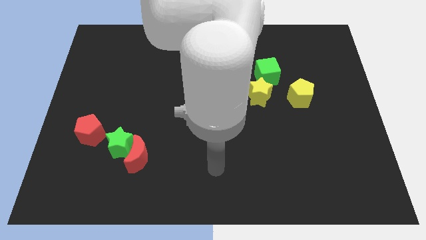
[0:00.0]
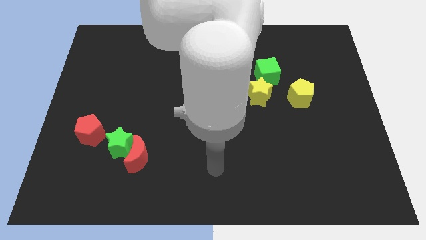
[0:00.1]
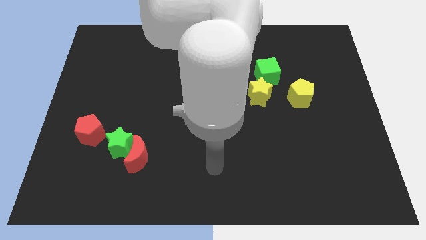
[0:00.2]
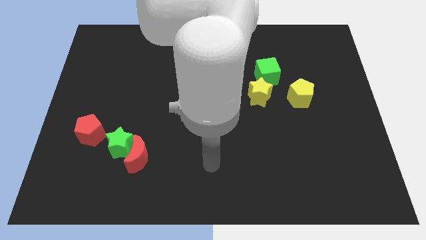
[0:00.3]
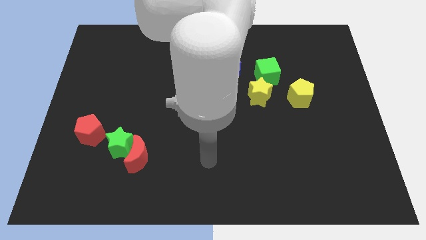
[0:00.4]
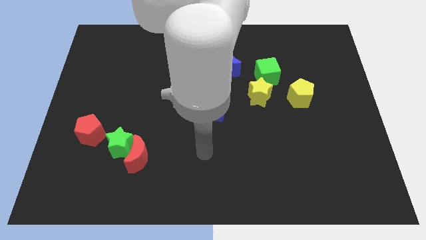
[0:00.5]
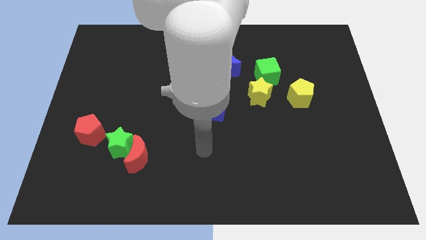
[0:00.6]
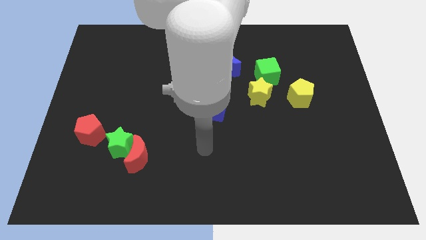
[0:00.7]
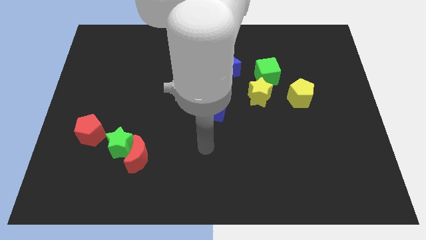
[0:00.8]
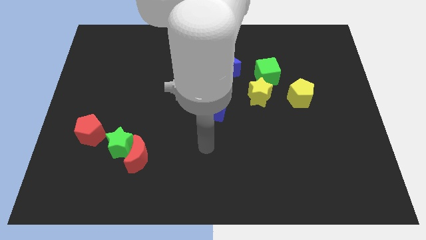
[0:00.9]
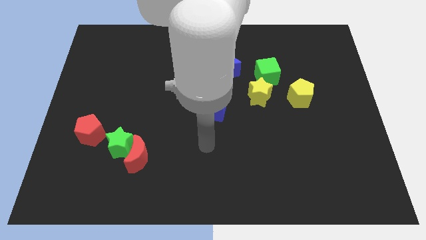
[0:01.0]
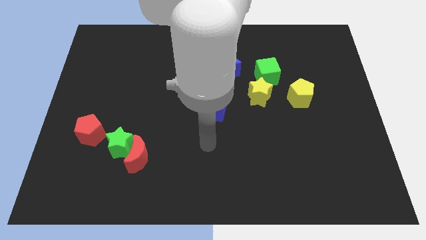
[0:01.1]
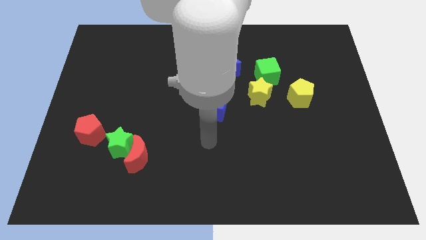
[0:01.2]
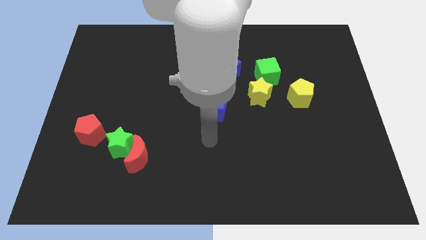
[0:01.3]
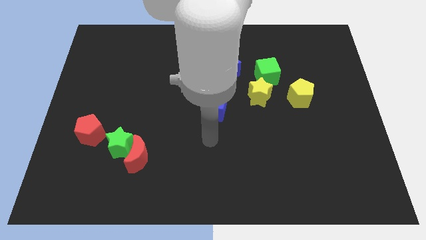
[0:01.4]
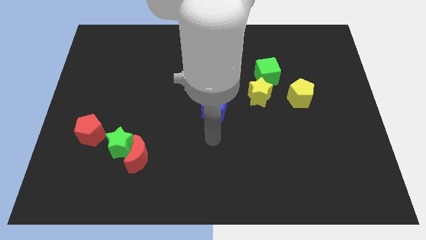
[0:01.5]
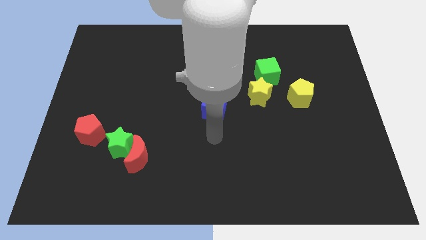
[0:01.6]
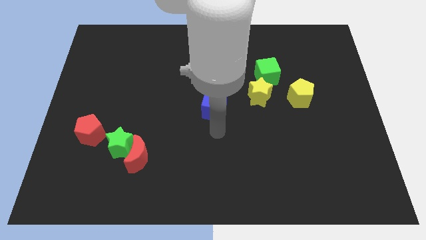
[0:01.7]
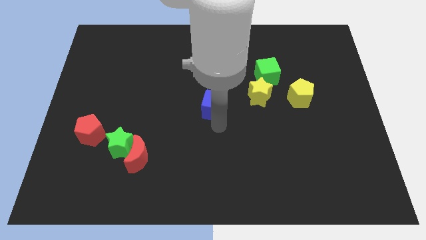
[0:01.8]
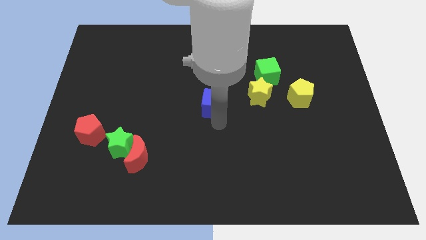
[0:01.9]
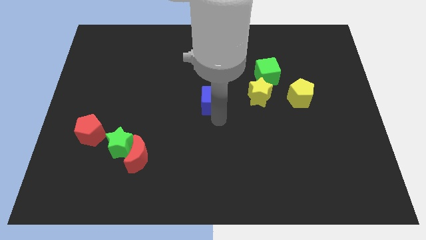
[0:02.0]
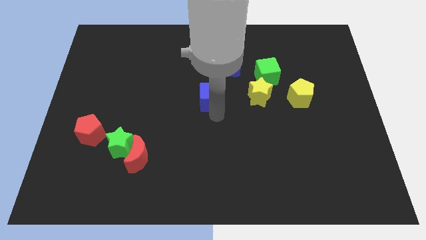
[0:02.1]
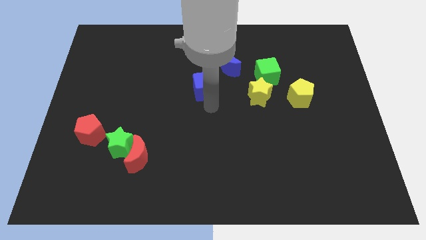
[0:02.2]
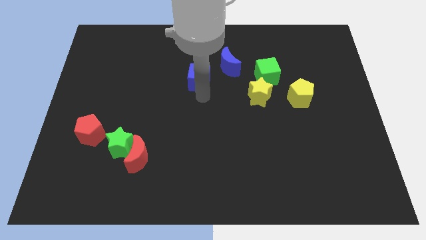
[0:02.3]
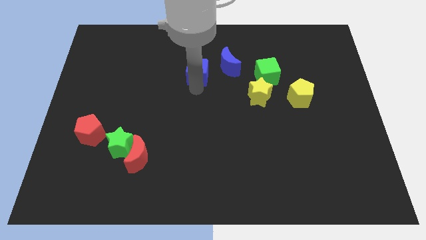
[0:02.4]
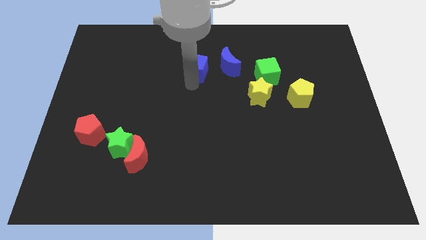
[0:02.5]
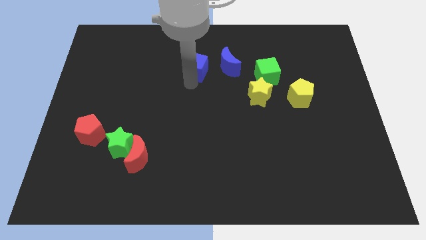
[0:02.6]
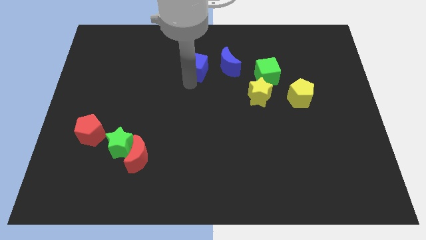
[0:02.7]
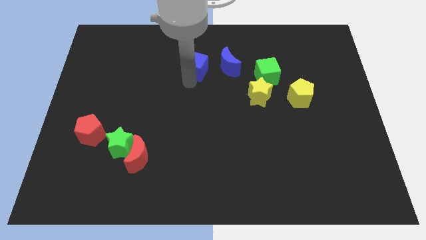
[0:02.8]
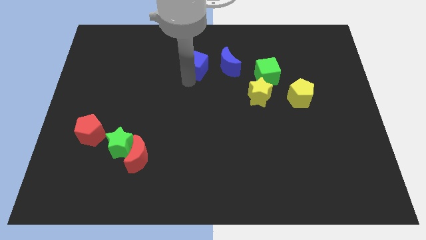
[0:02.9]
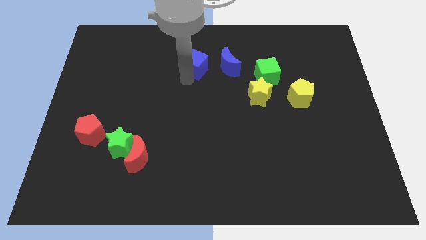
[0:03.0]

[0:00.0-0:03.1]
place the blue cube on the left side of the blue crescent

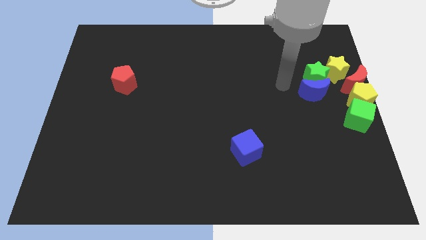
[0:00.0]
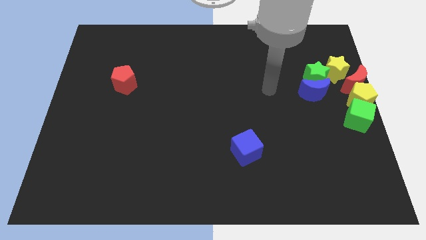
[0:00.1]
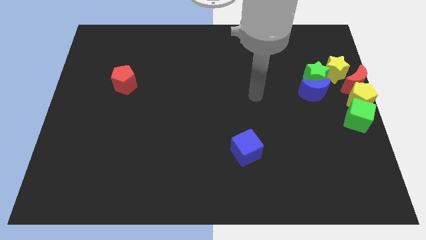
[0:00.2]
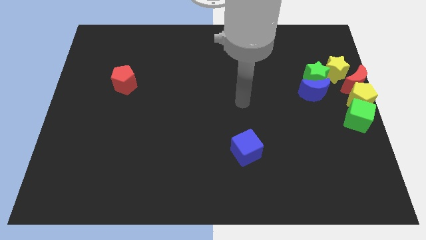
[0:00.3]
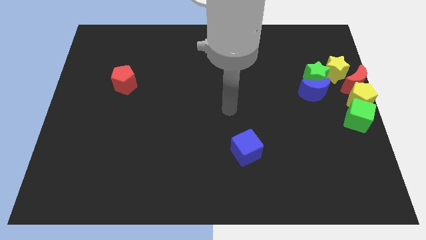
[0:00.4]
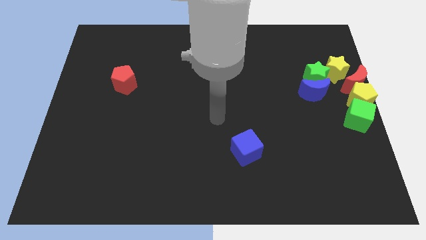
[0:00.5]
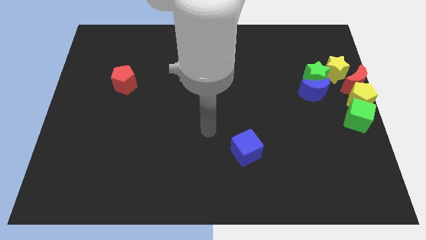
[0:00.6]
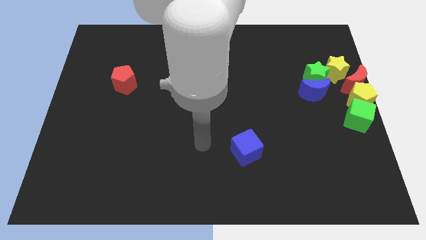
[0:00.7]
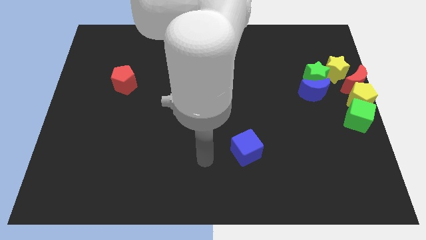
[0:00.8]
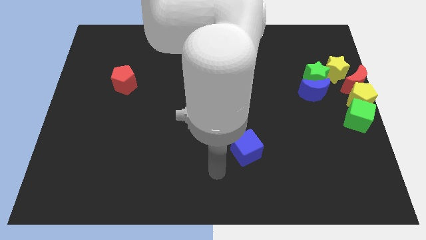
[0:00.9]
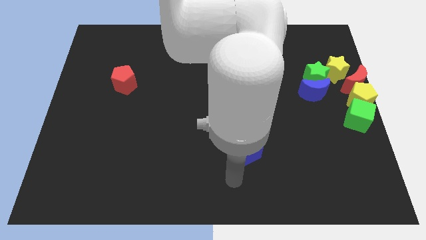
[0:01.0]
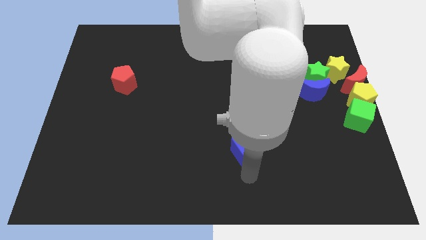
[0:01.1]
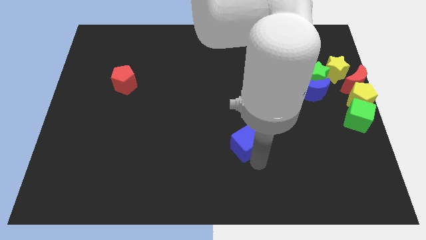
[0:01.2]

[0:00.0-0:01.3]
point your arm at the bottom side of the blue cube

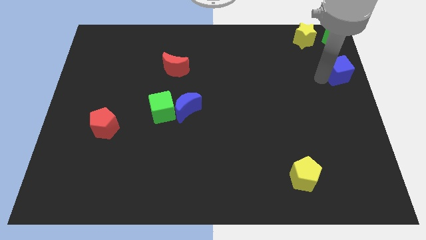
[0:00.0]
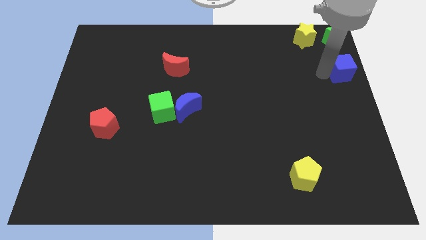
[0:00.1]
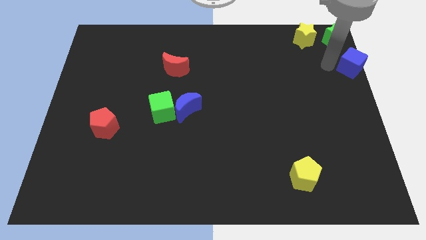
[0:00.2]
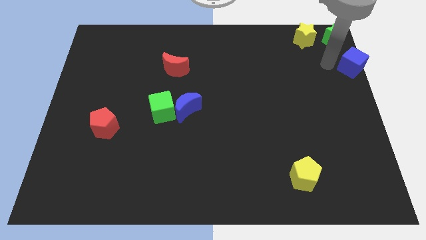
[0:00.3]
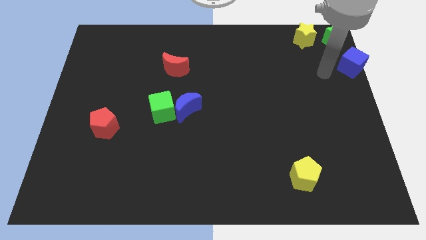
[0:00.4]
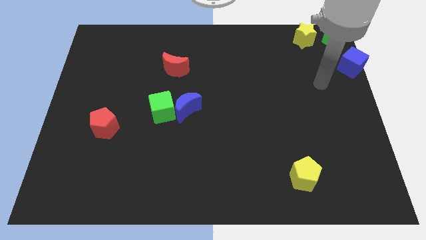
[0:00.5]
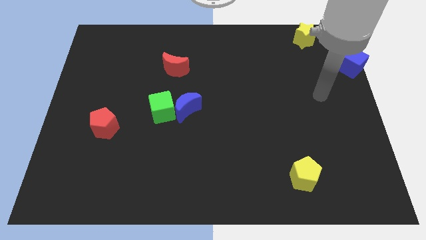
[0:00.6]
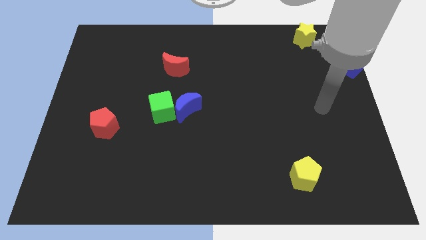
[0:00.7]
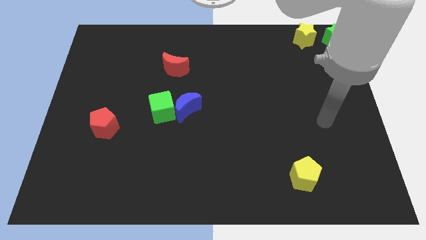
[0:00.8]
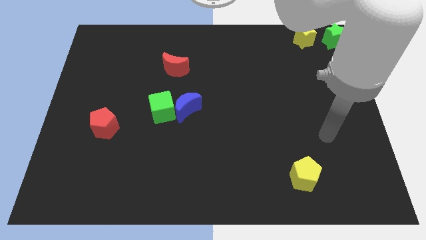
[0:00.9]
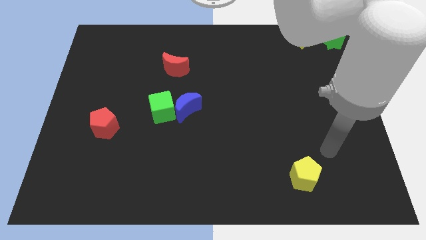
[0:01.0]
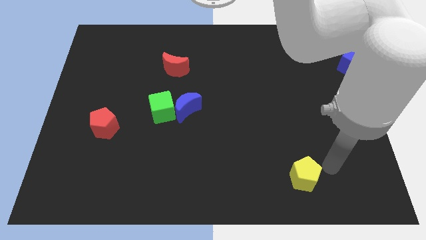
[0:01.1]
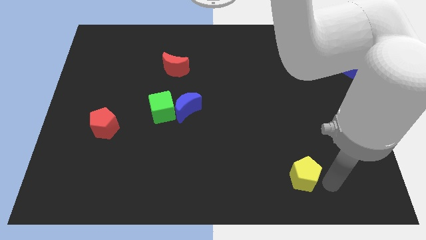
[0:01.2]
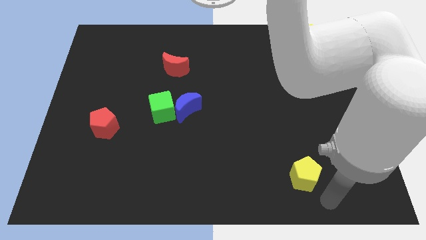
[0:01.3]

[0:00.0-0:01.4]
move your arm away from blue cube

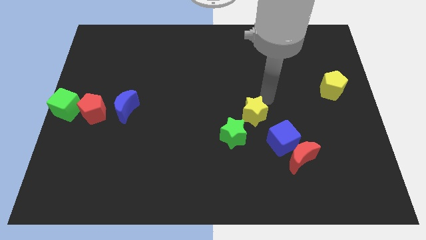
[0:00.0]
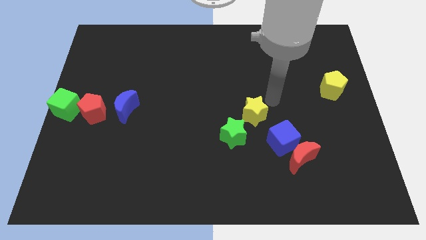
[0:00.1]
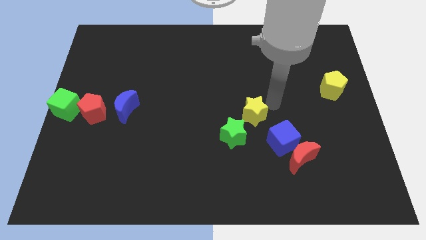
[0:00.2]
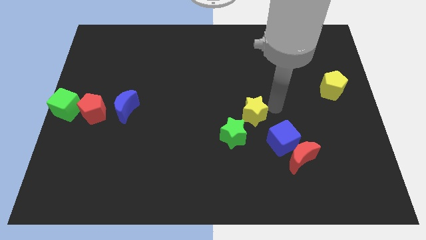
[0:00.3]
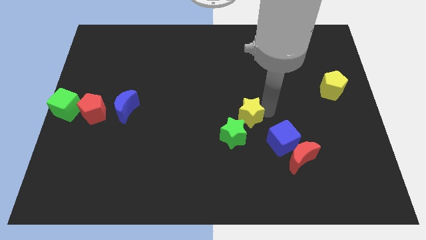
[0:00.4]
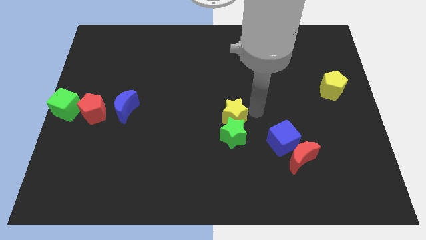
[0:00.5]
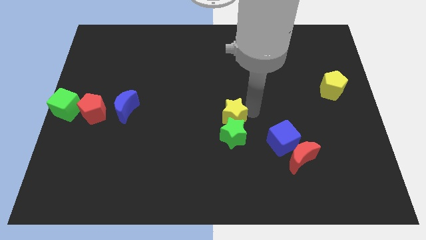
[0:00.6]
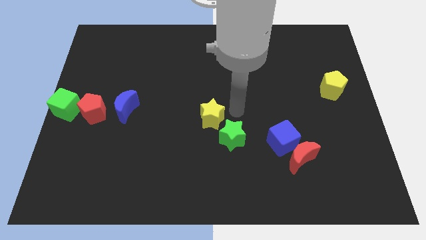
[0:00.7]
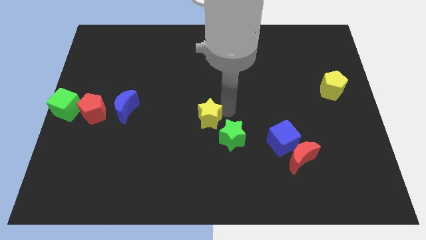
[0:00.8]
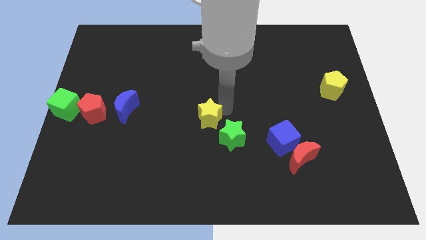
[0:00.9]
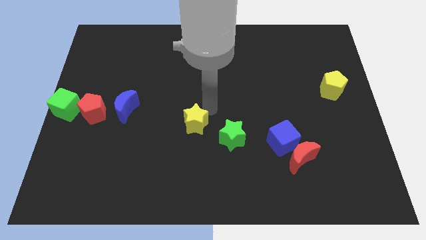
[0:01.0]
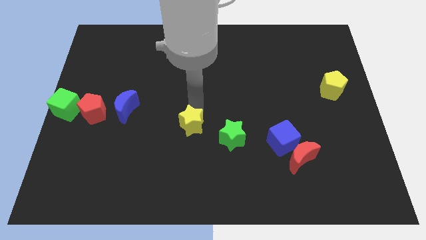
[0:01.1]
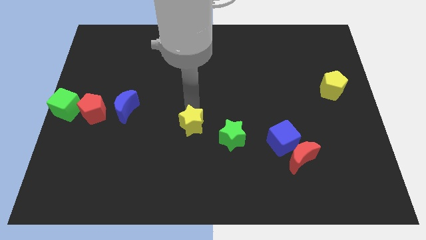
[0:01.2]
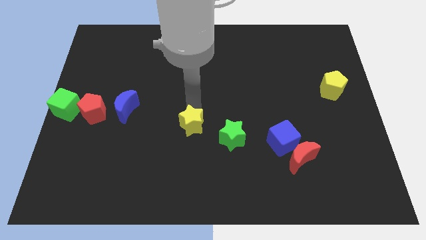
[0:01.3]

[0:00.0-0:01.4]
separate the yellow star and green star

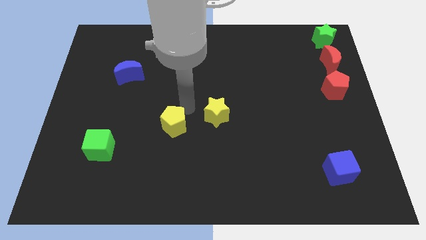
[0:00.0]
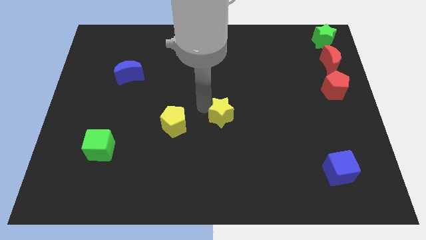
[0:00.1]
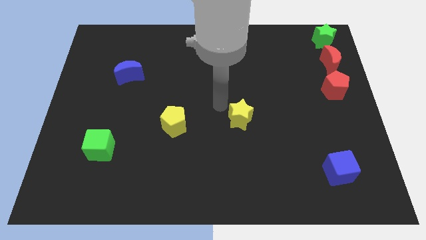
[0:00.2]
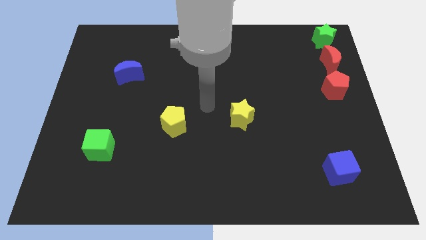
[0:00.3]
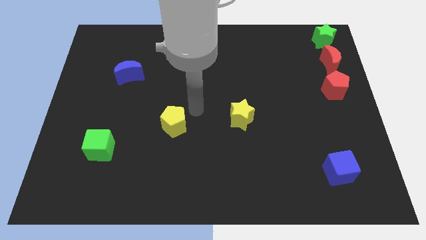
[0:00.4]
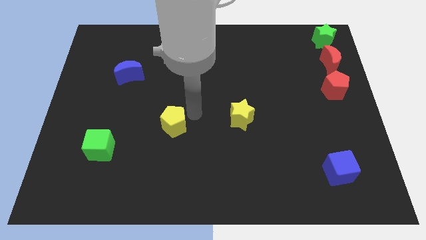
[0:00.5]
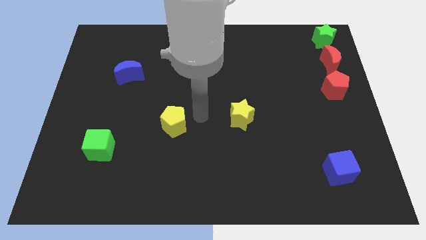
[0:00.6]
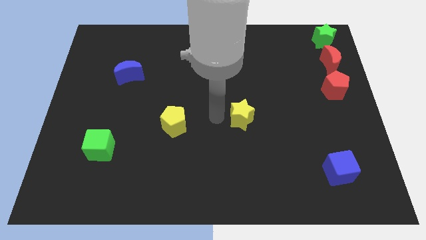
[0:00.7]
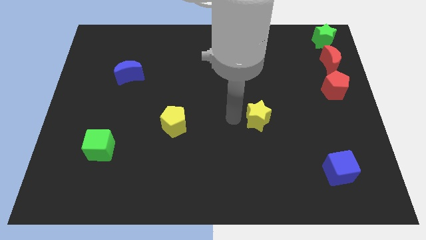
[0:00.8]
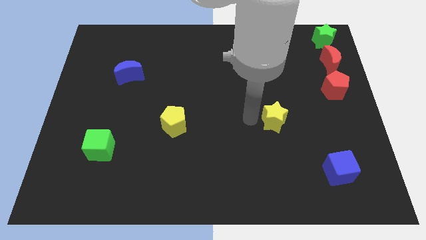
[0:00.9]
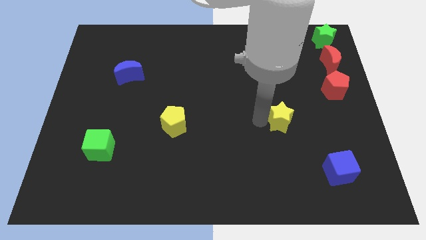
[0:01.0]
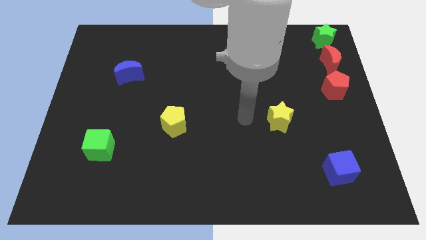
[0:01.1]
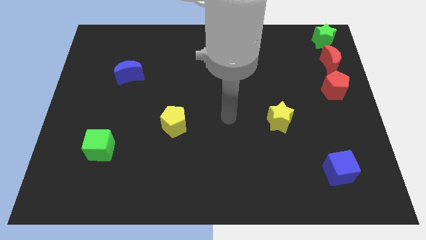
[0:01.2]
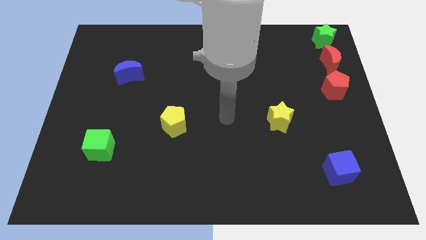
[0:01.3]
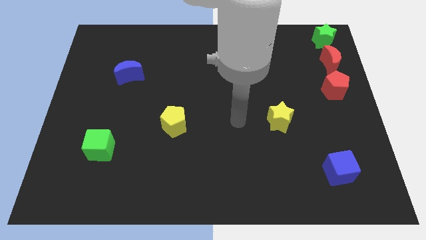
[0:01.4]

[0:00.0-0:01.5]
push the yellow star to right side of the board

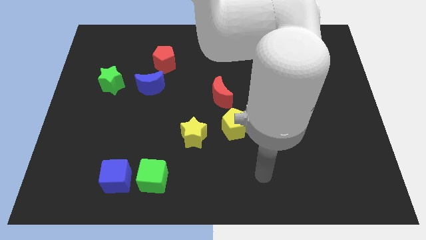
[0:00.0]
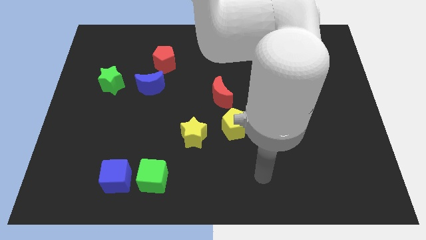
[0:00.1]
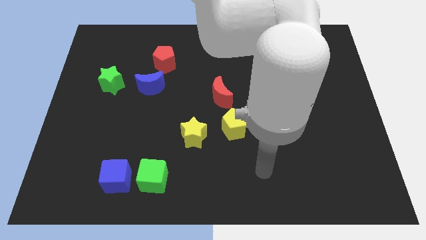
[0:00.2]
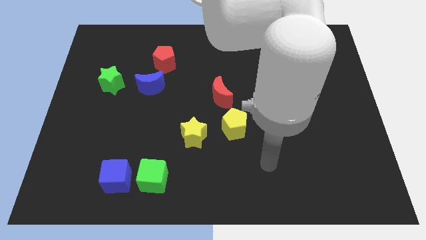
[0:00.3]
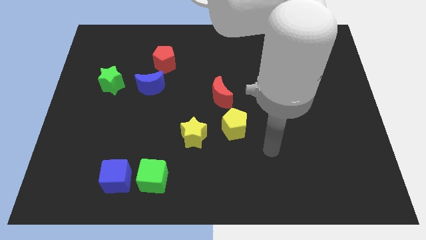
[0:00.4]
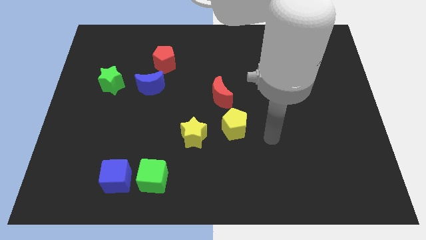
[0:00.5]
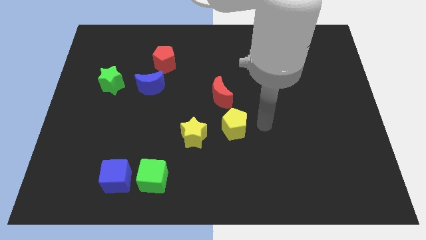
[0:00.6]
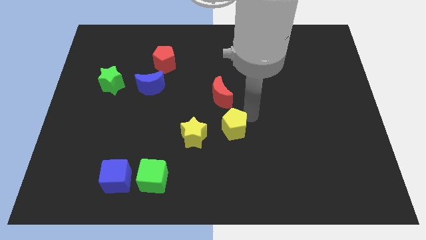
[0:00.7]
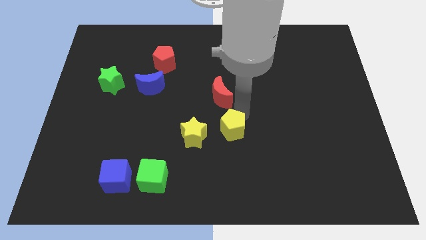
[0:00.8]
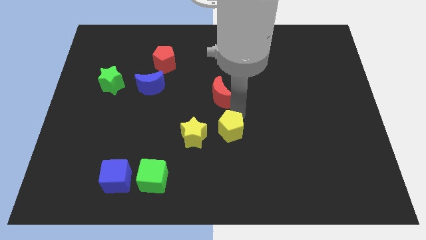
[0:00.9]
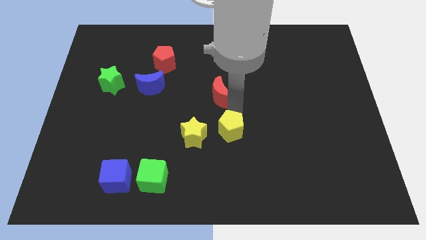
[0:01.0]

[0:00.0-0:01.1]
touch the yellow pentagon
